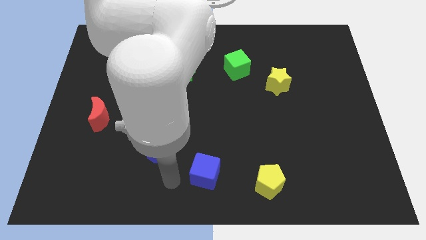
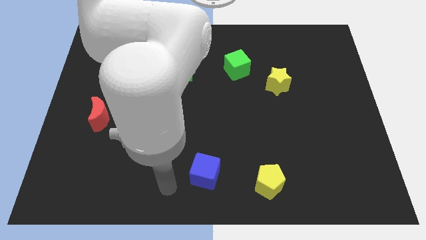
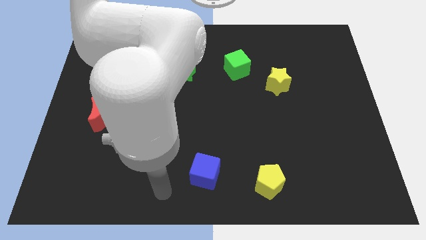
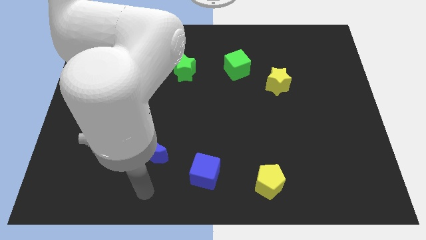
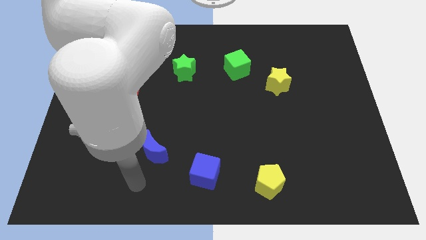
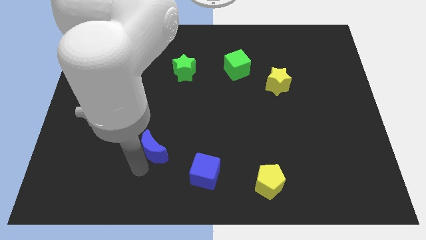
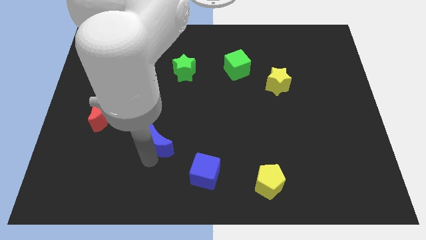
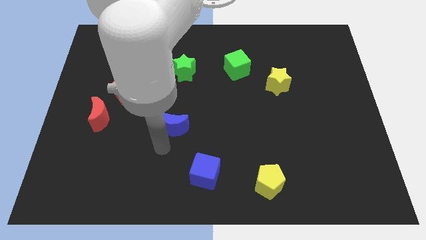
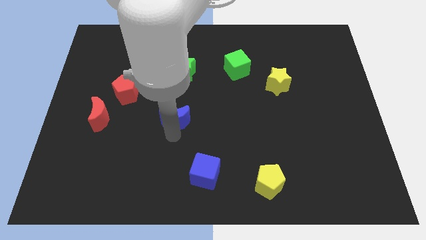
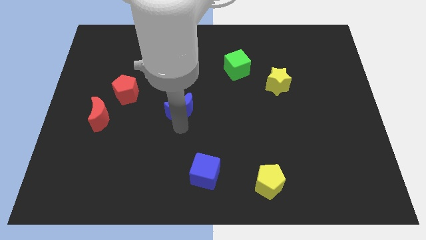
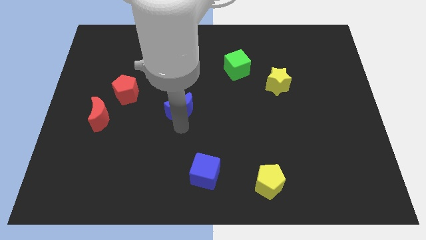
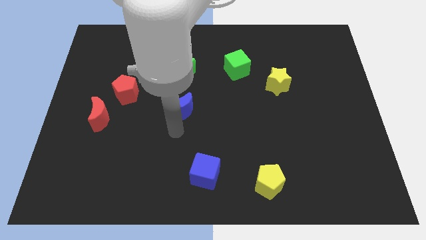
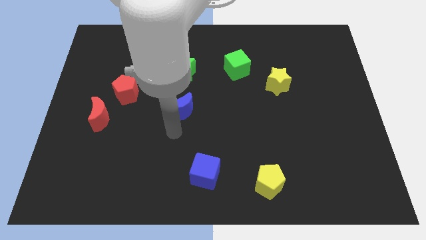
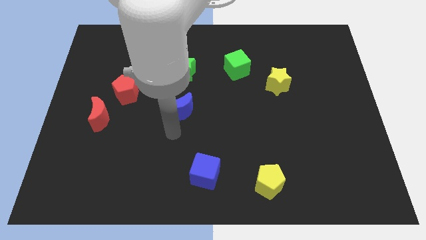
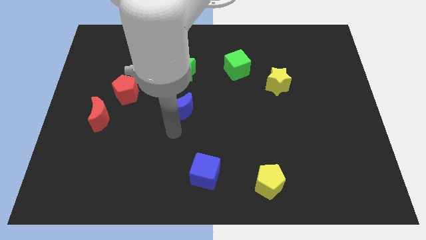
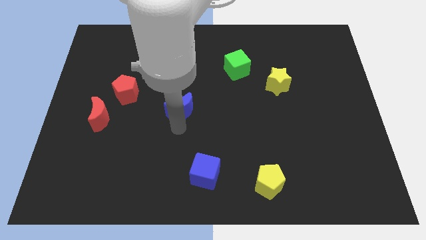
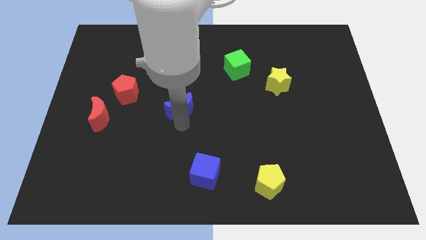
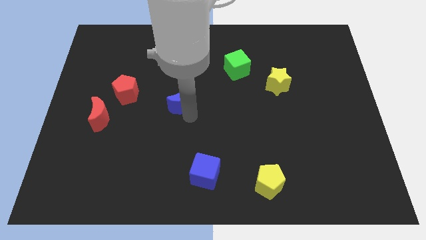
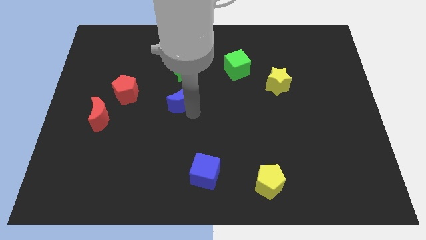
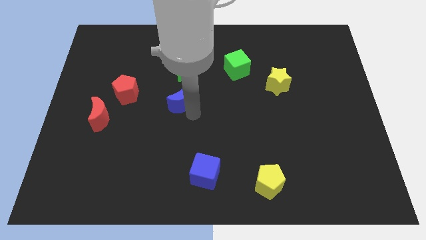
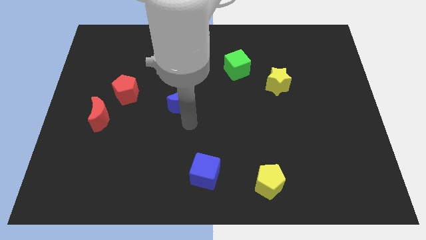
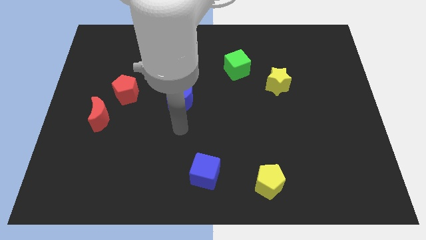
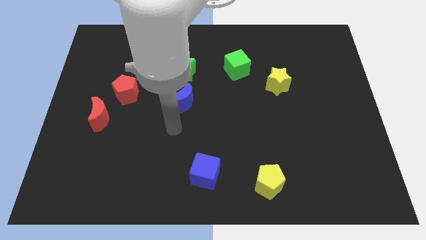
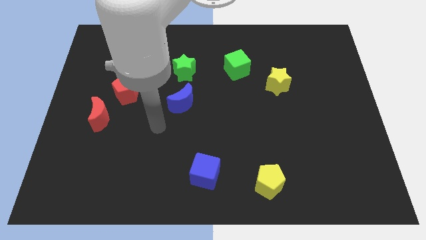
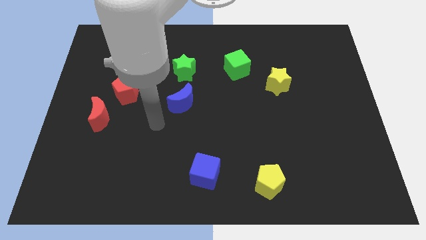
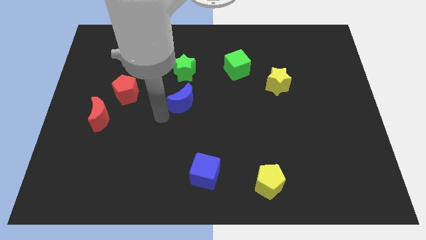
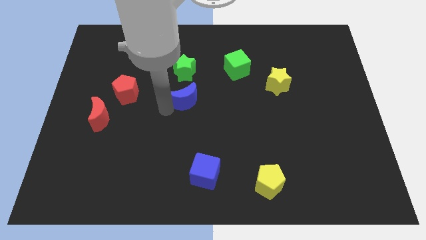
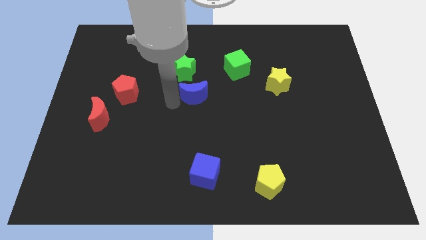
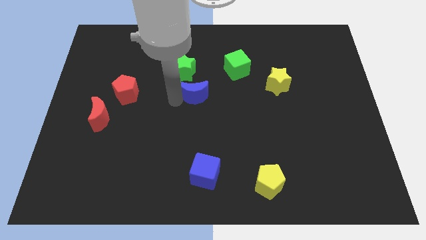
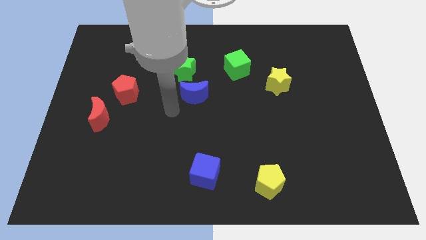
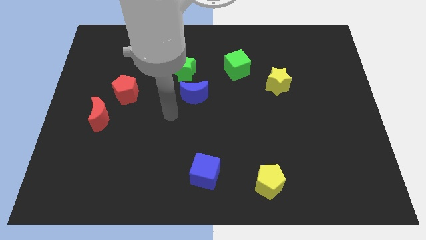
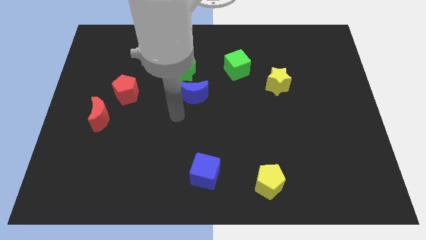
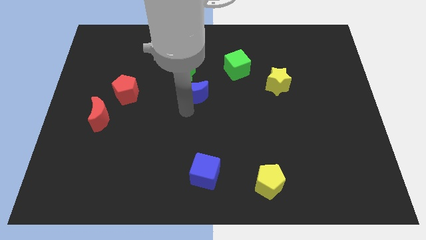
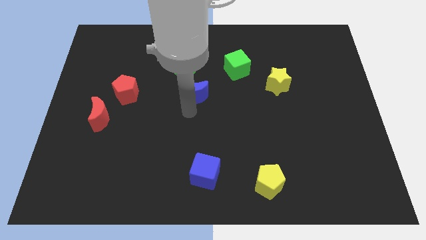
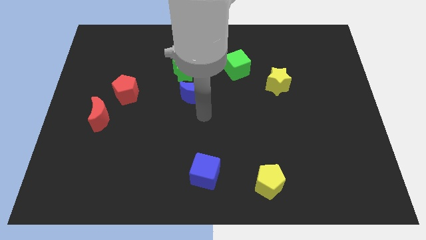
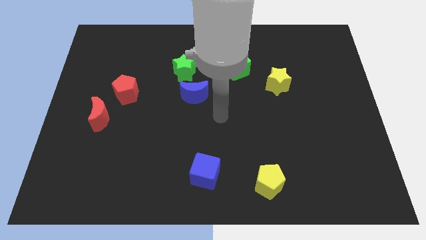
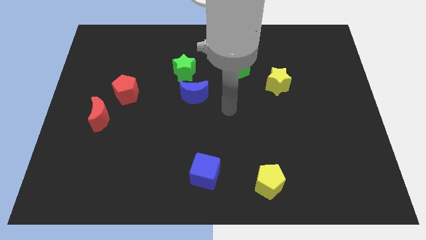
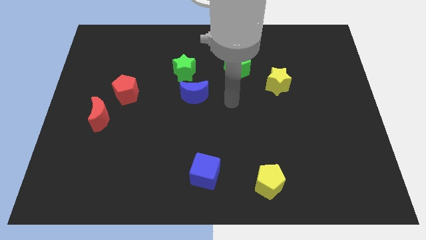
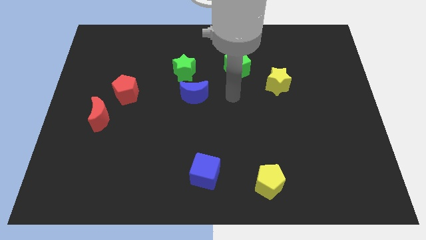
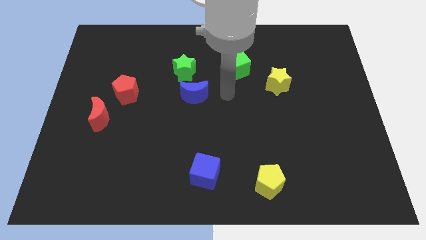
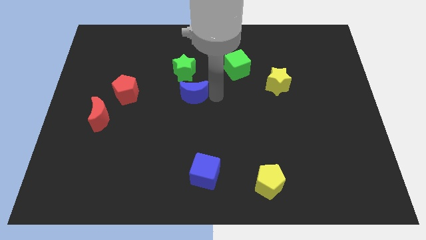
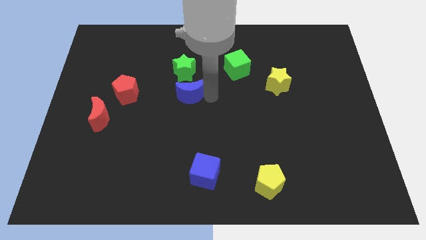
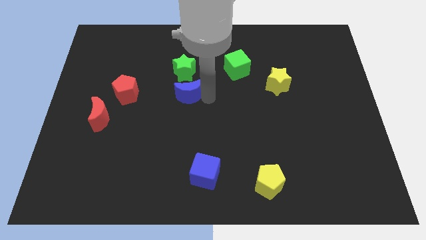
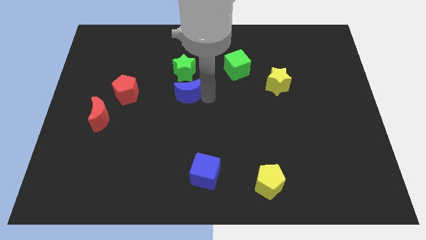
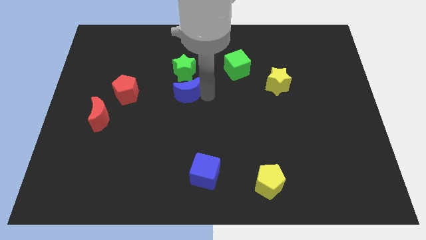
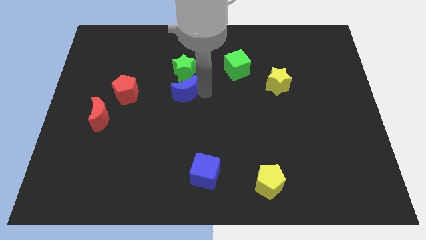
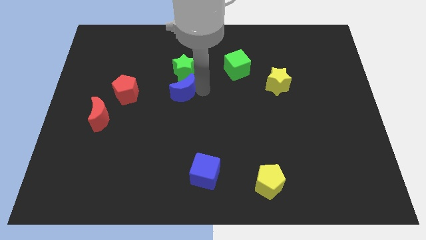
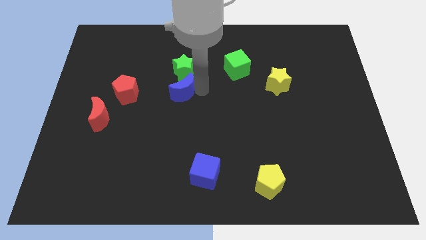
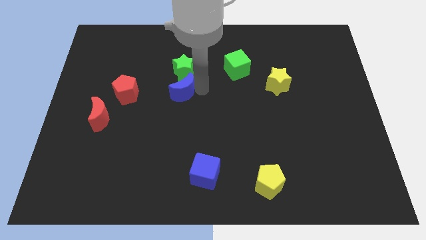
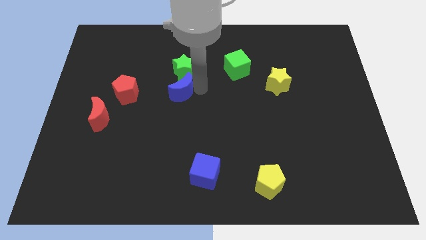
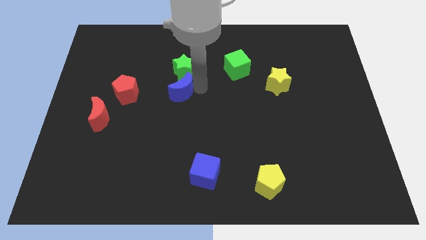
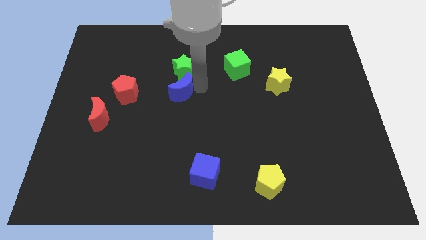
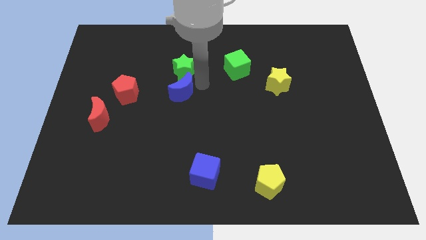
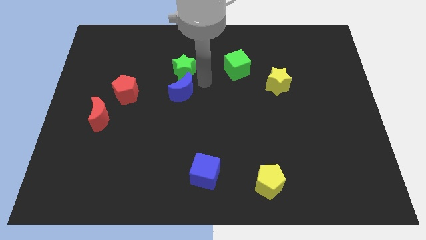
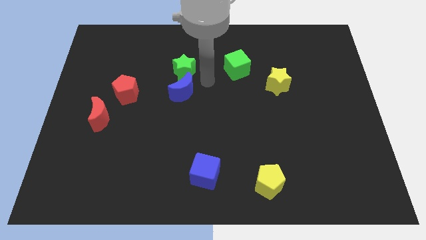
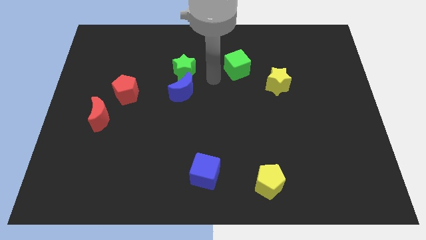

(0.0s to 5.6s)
put the blue crescent underneath the green star

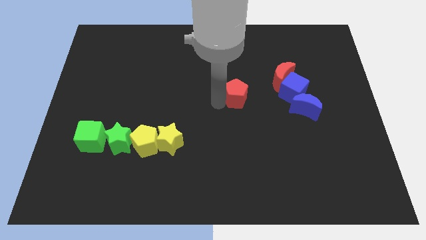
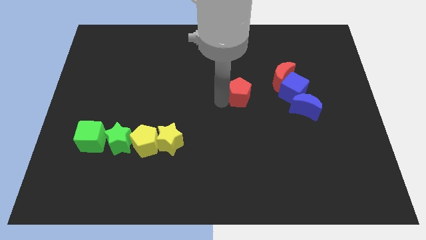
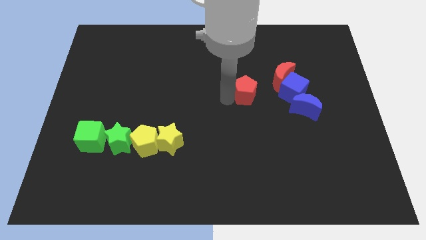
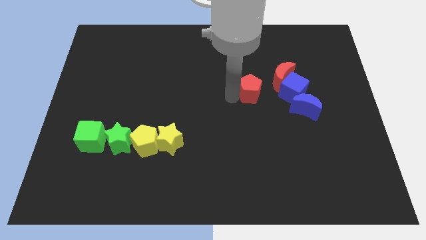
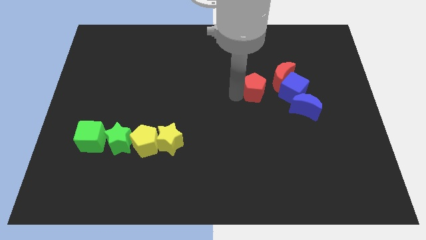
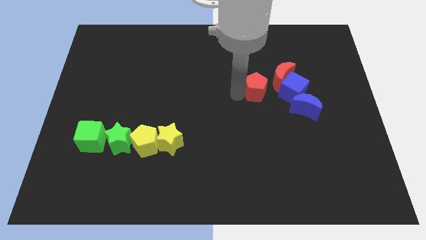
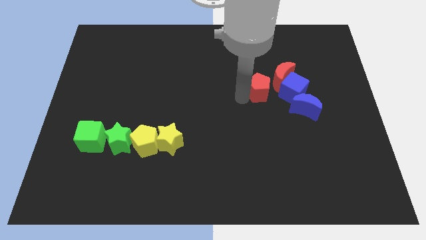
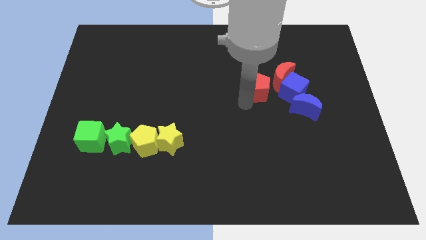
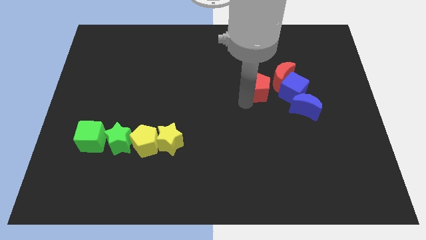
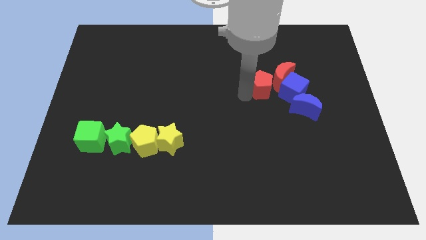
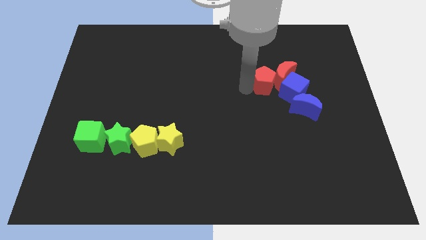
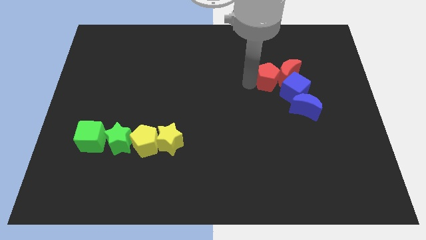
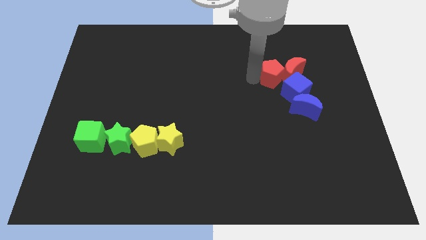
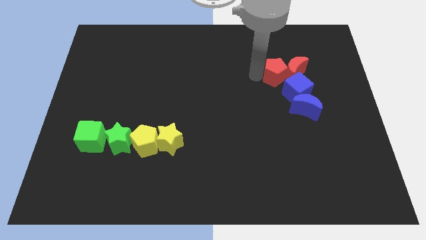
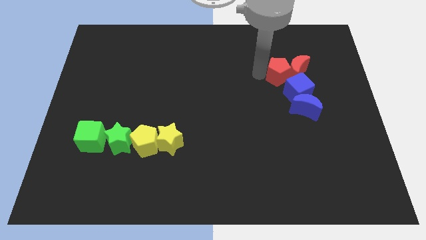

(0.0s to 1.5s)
push the red pentagon to the left of the red crescent

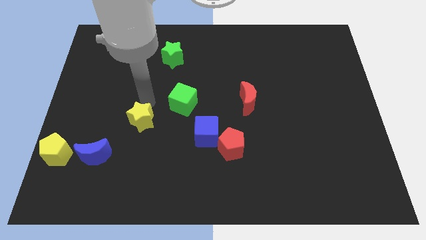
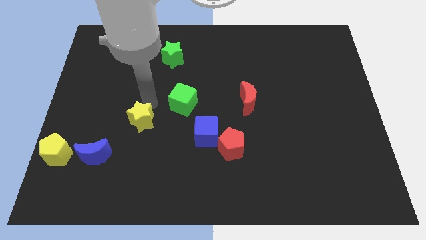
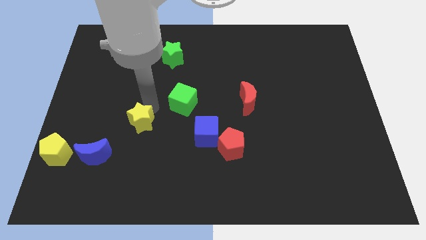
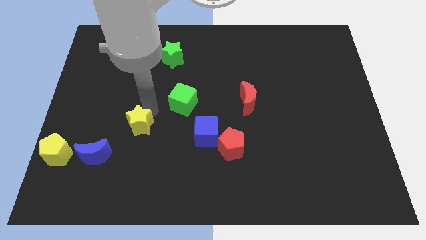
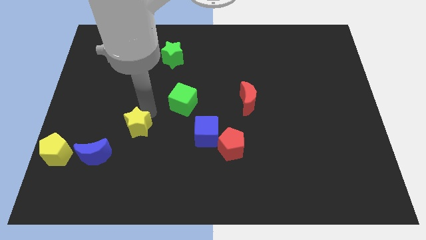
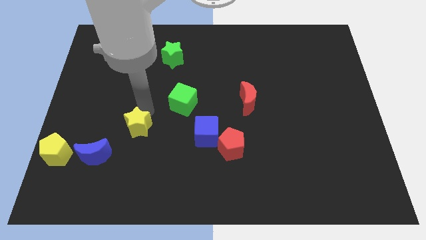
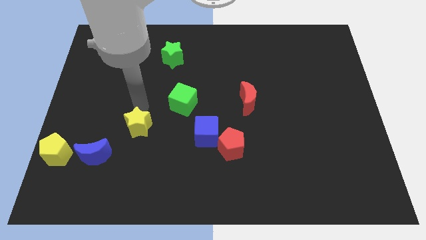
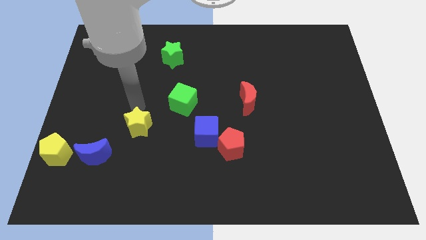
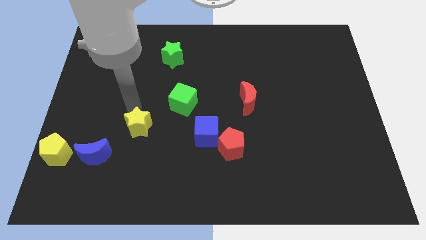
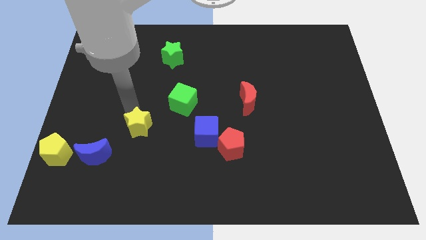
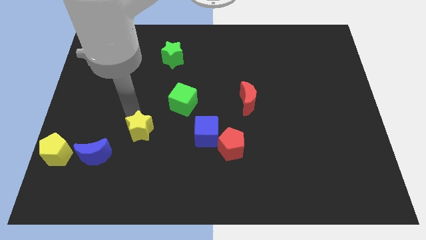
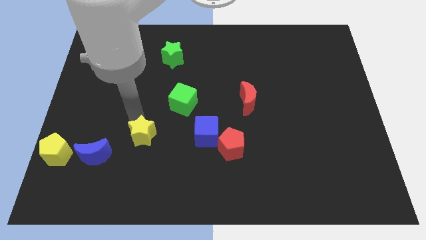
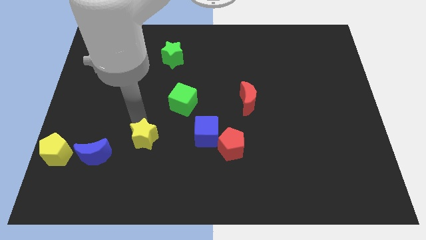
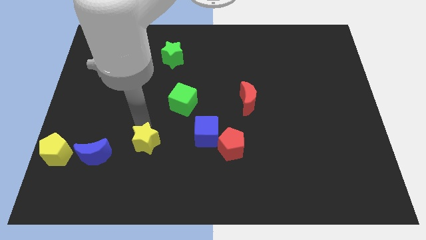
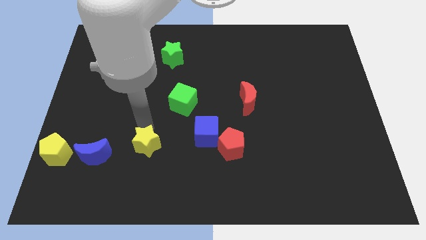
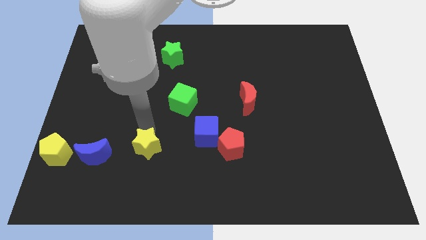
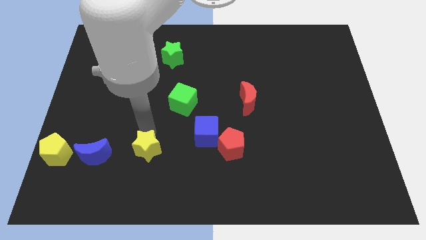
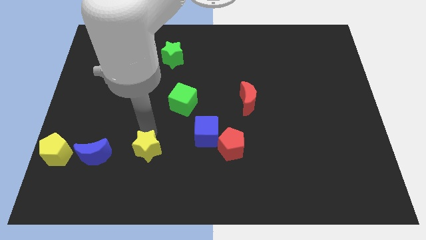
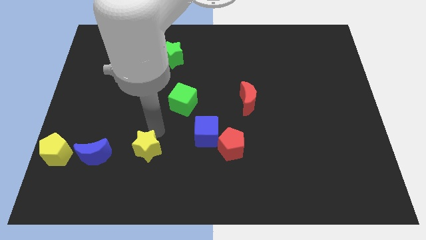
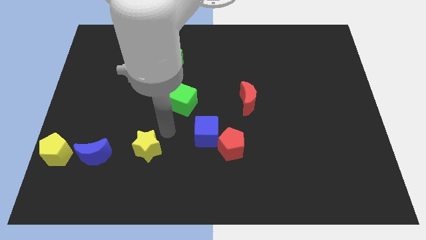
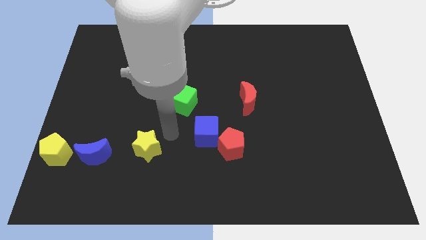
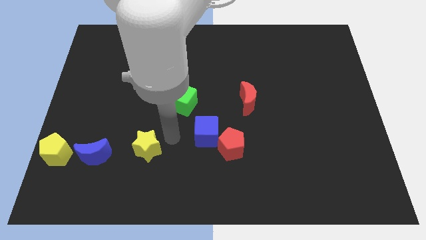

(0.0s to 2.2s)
push the yellow star right to the blue moon
